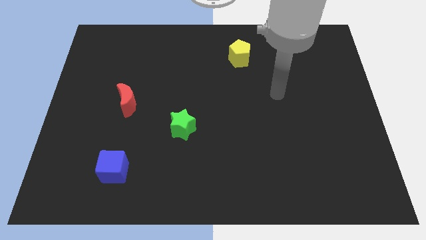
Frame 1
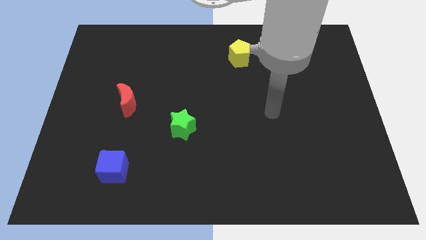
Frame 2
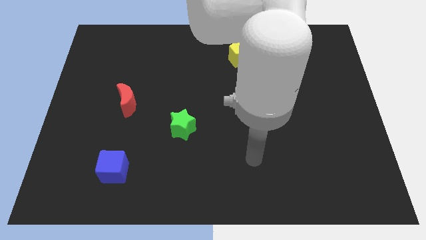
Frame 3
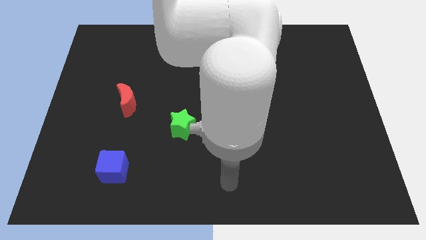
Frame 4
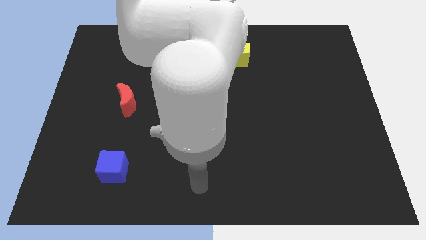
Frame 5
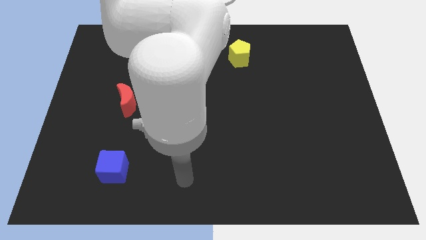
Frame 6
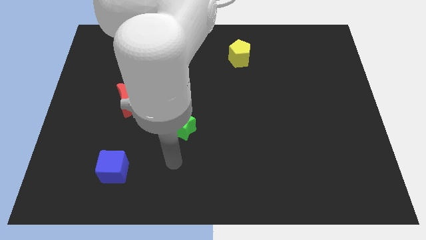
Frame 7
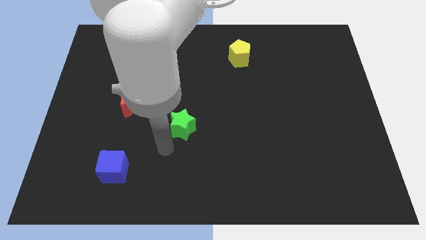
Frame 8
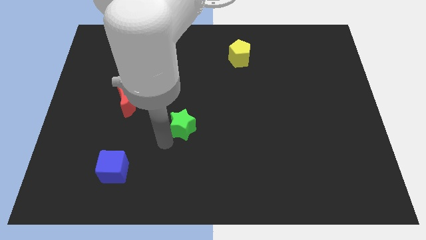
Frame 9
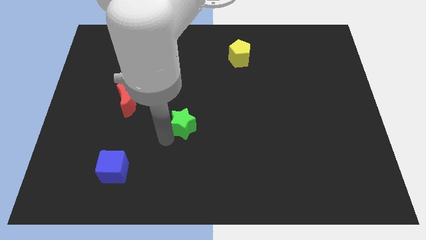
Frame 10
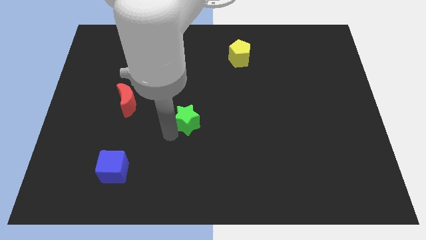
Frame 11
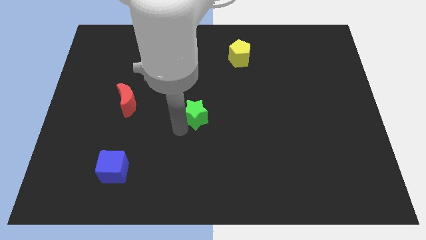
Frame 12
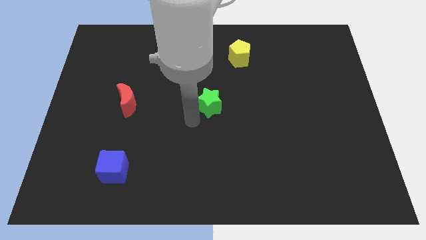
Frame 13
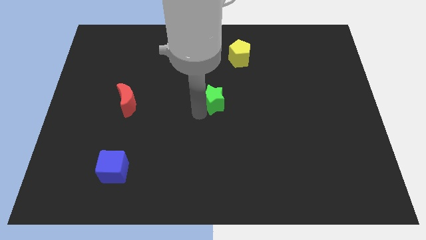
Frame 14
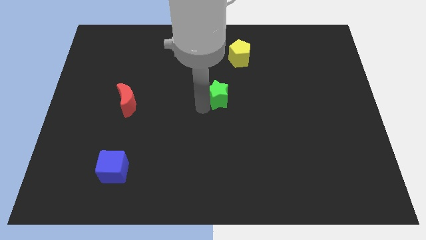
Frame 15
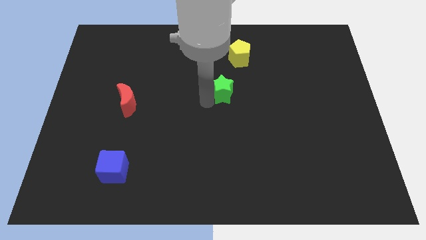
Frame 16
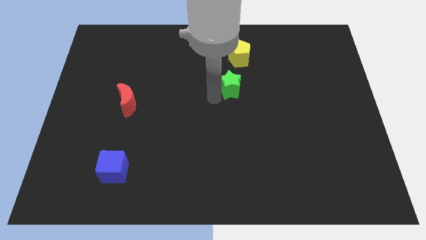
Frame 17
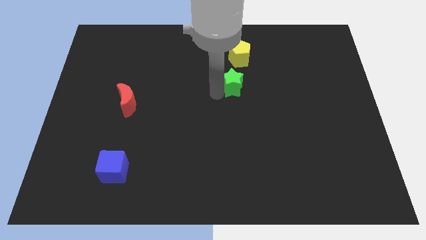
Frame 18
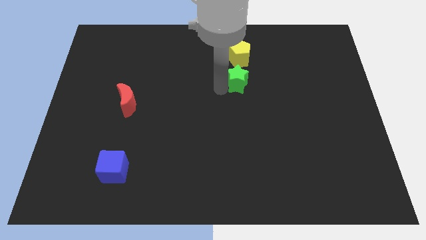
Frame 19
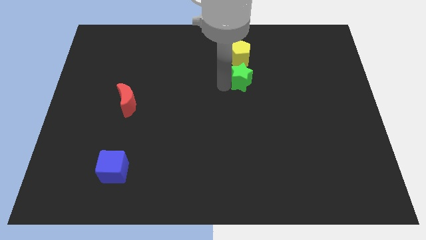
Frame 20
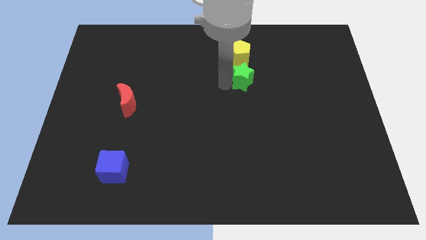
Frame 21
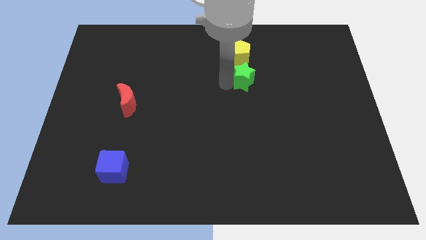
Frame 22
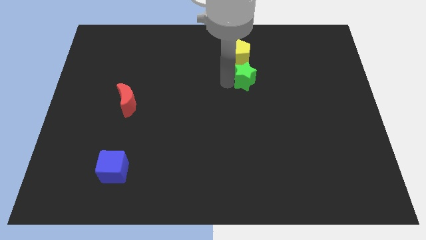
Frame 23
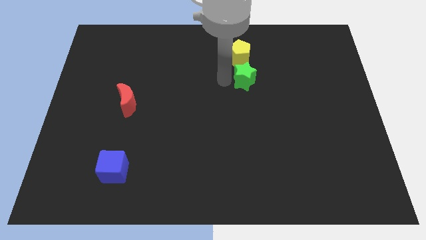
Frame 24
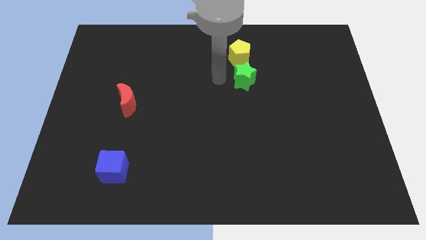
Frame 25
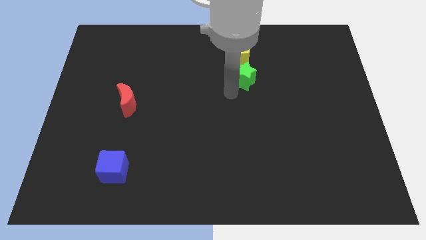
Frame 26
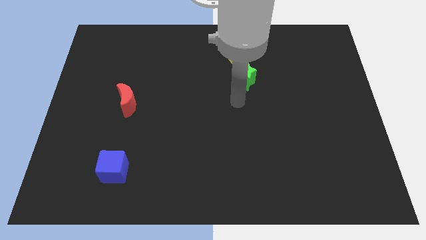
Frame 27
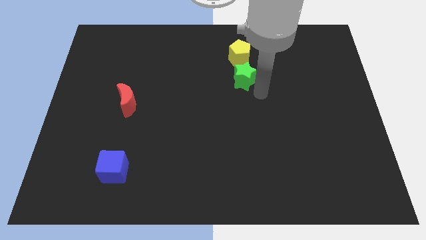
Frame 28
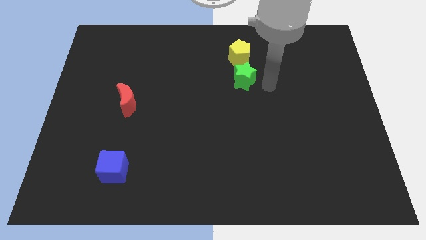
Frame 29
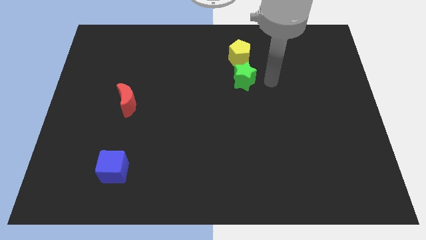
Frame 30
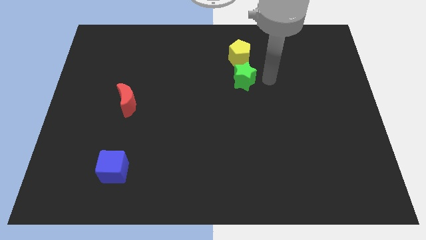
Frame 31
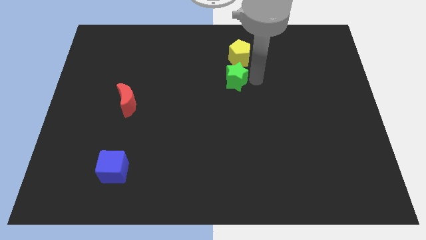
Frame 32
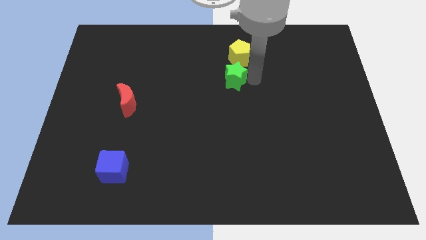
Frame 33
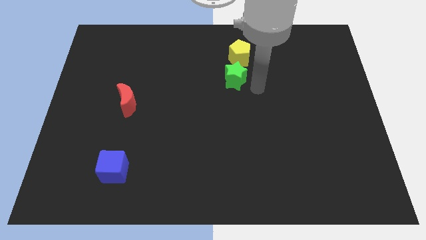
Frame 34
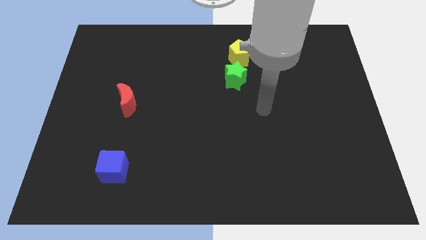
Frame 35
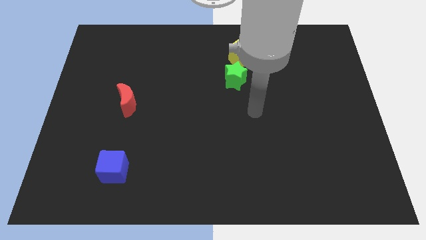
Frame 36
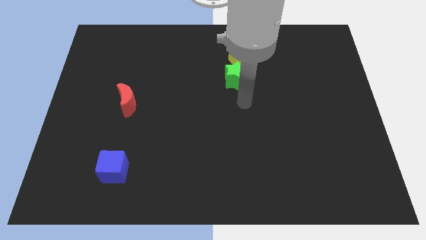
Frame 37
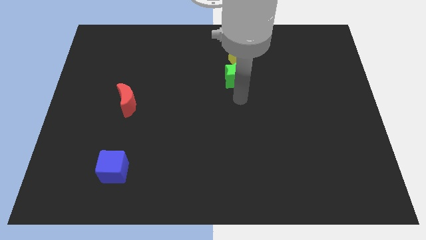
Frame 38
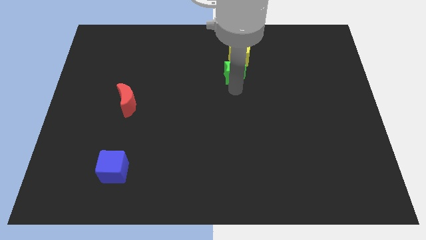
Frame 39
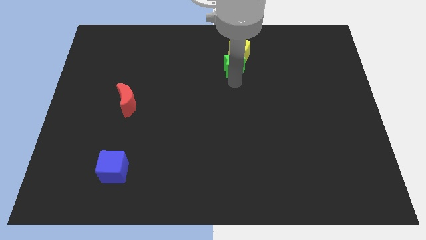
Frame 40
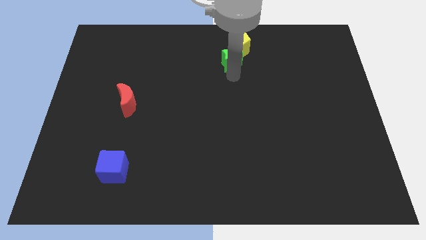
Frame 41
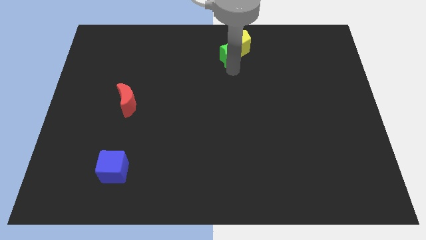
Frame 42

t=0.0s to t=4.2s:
push the star next to the yellow block

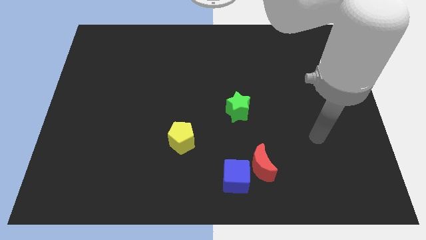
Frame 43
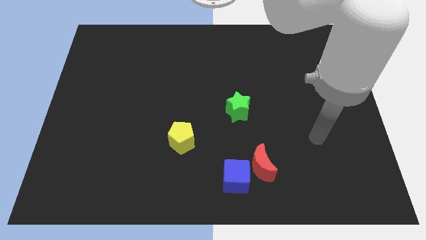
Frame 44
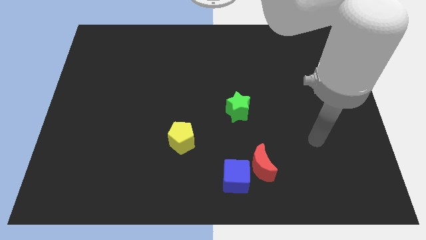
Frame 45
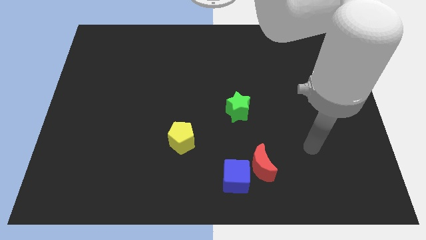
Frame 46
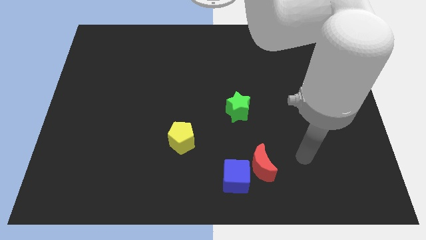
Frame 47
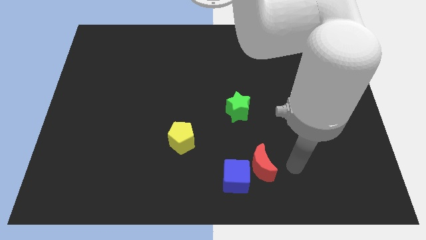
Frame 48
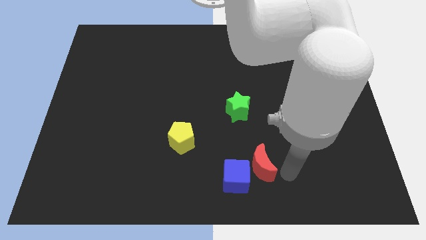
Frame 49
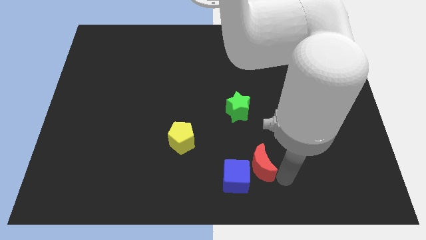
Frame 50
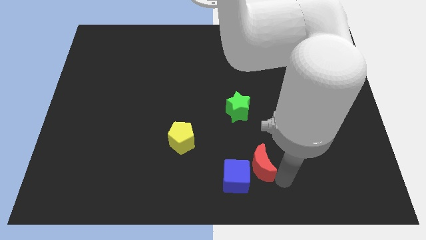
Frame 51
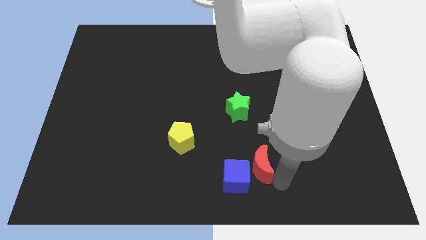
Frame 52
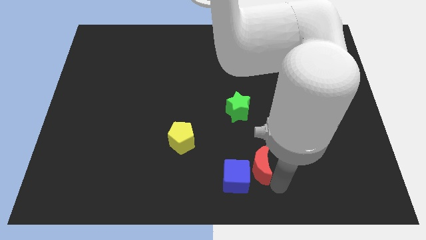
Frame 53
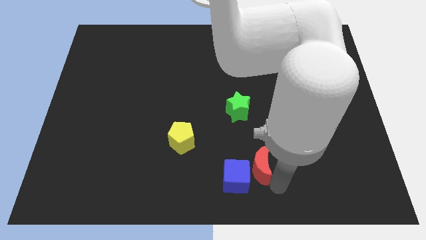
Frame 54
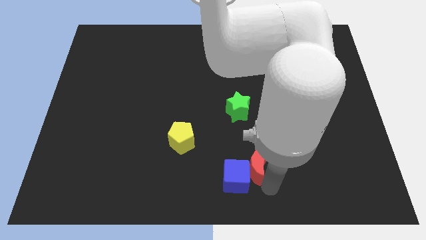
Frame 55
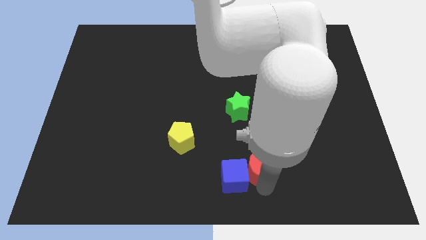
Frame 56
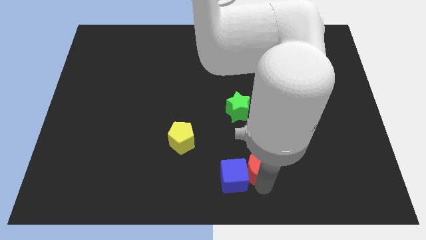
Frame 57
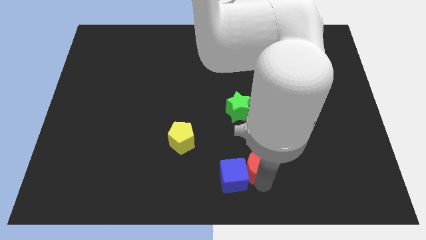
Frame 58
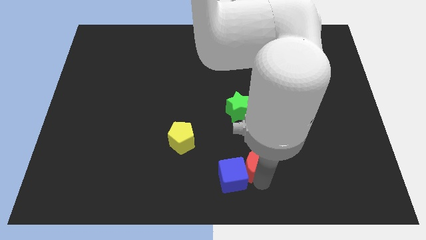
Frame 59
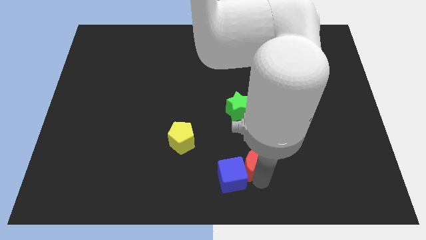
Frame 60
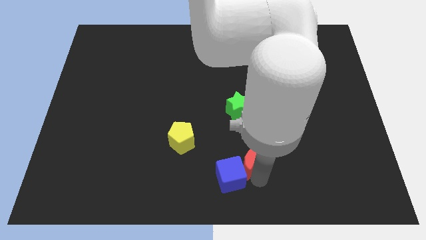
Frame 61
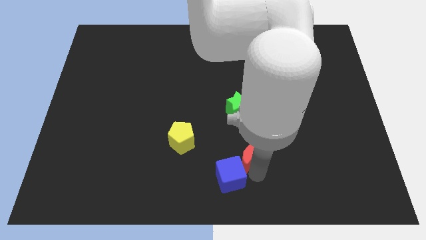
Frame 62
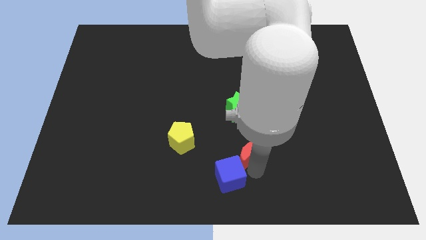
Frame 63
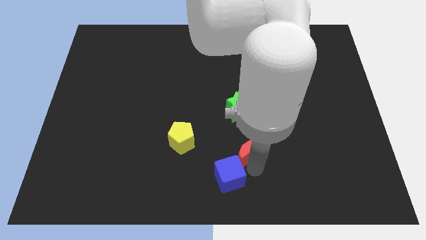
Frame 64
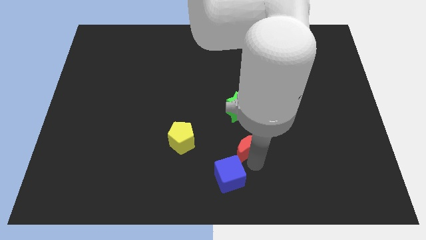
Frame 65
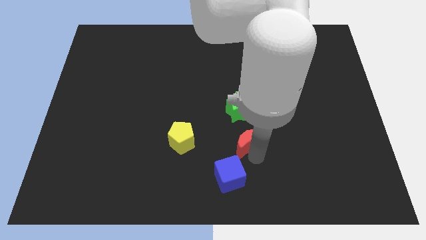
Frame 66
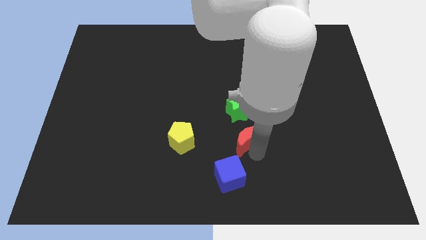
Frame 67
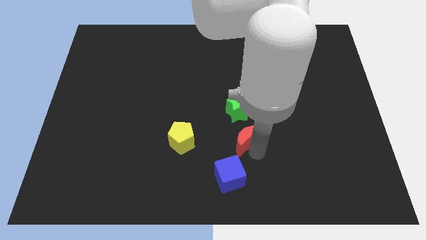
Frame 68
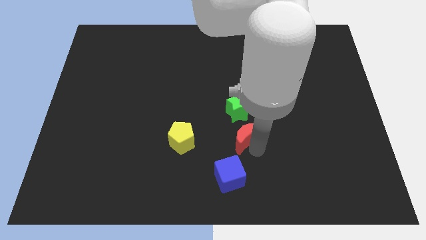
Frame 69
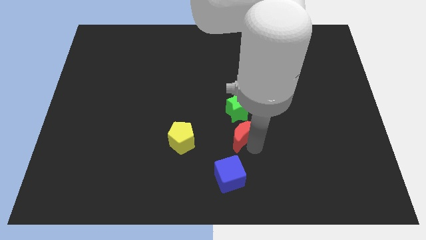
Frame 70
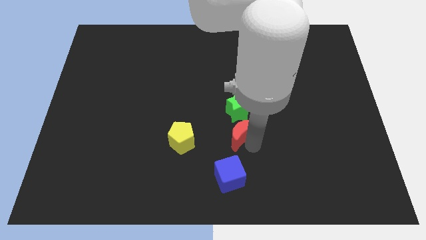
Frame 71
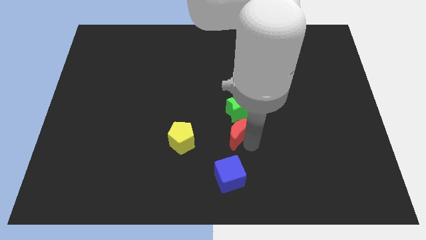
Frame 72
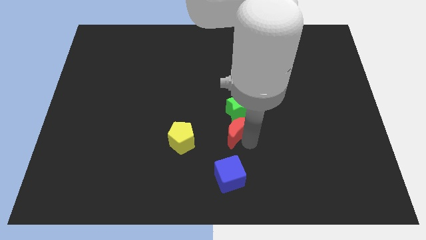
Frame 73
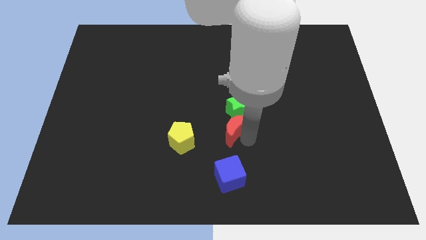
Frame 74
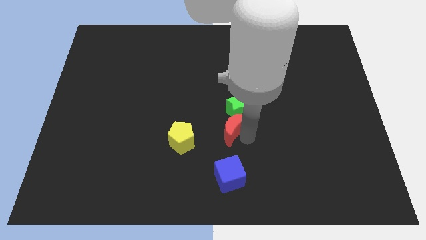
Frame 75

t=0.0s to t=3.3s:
slide the red block close to the green block

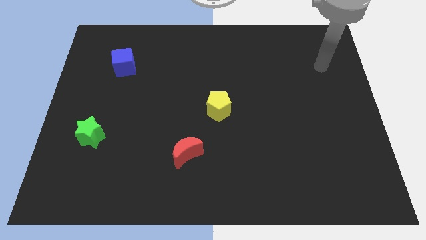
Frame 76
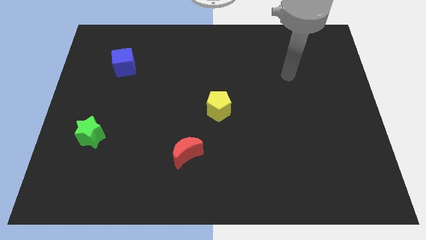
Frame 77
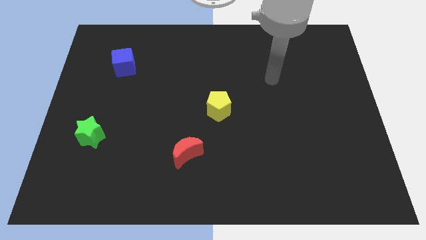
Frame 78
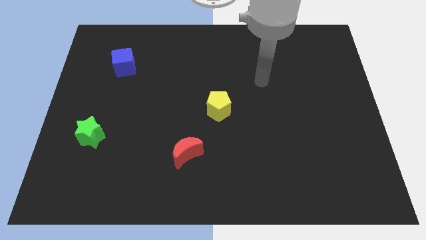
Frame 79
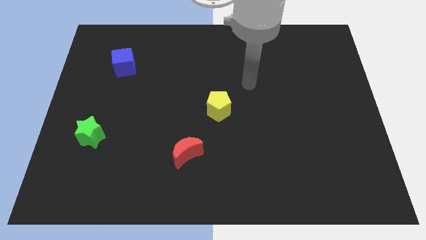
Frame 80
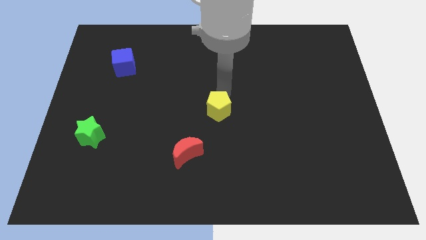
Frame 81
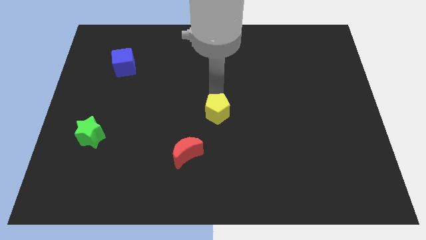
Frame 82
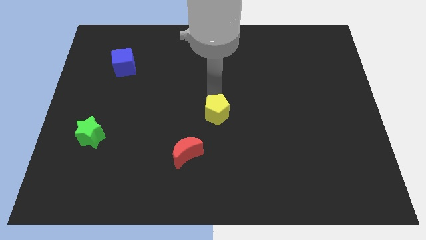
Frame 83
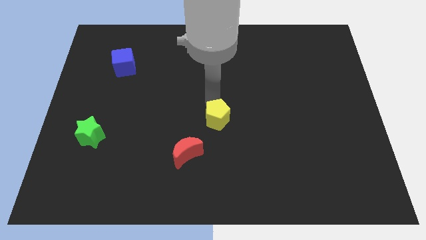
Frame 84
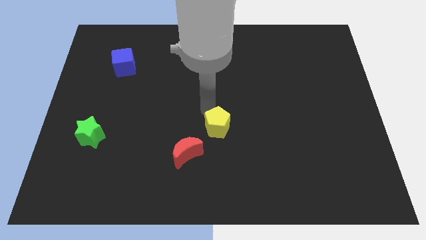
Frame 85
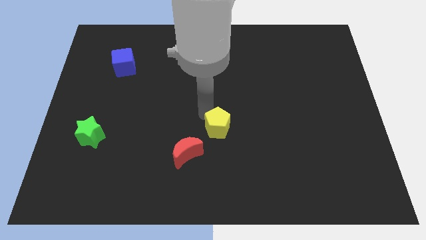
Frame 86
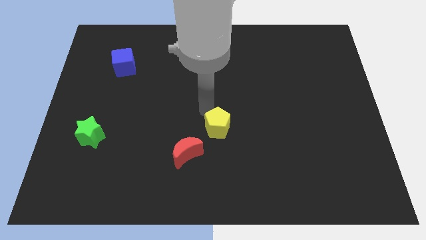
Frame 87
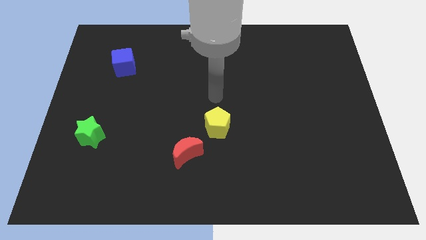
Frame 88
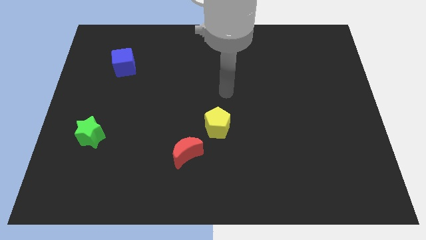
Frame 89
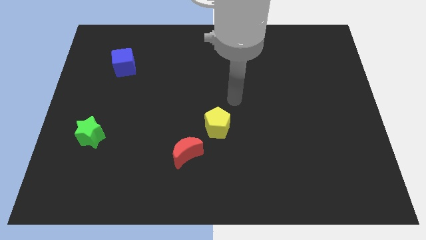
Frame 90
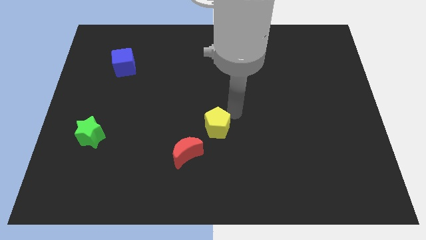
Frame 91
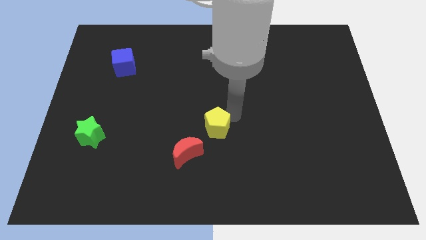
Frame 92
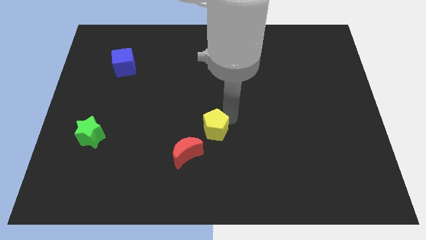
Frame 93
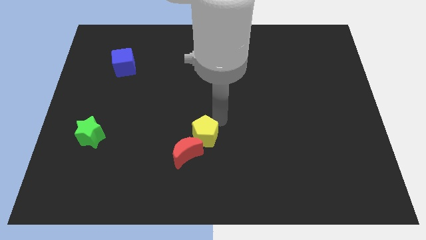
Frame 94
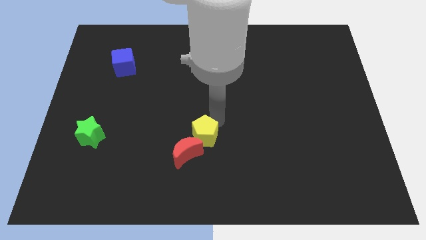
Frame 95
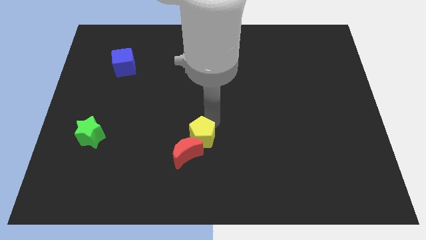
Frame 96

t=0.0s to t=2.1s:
move the yellow block to the red block
